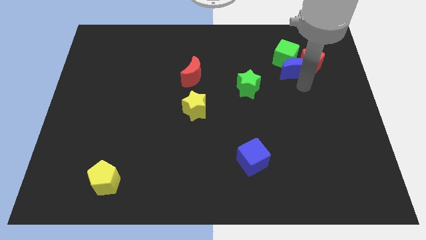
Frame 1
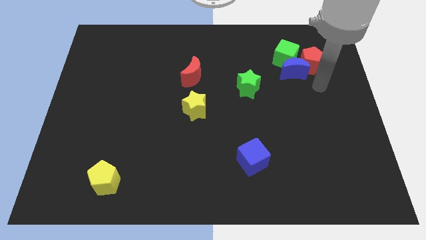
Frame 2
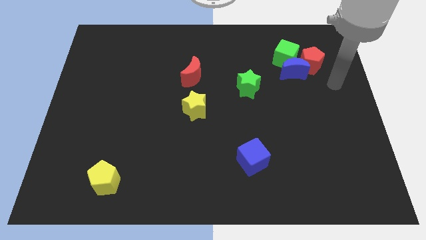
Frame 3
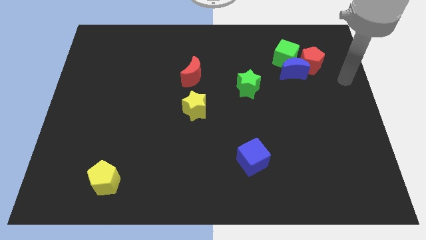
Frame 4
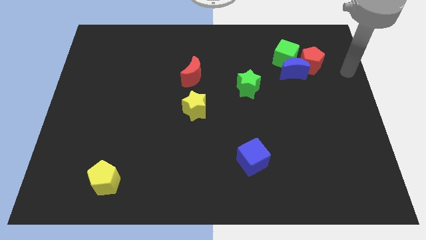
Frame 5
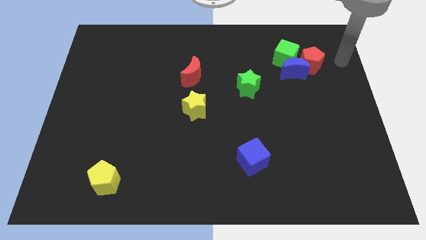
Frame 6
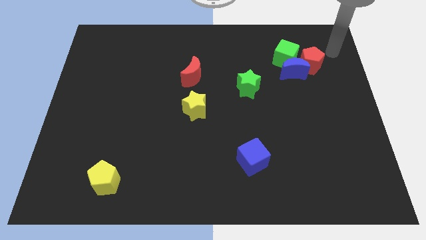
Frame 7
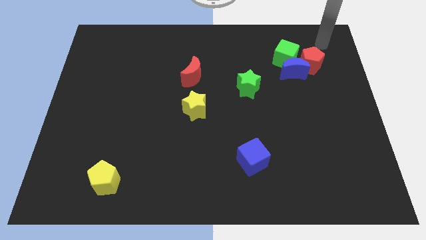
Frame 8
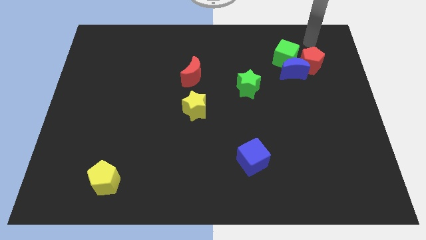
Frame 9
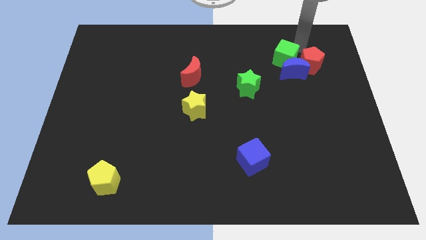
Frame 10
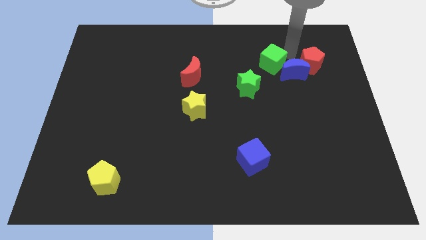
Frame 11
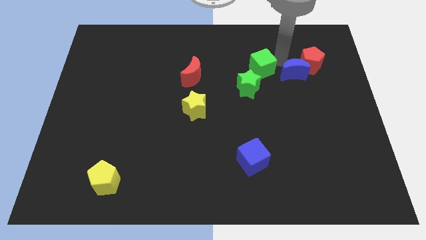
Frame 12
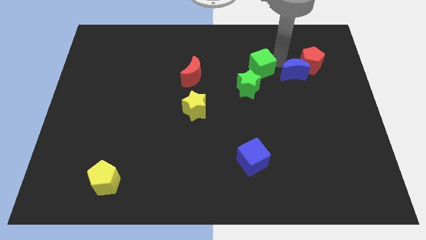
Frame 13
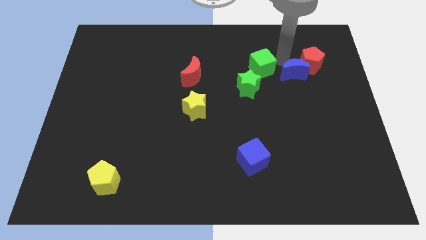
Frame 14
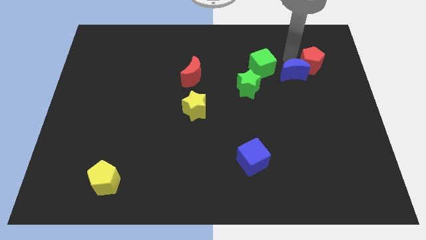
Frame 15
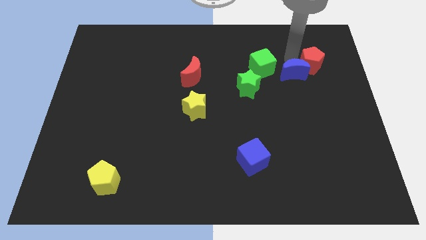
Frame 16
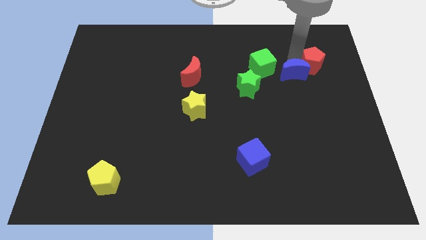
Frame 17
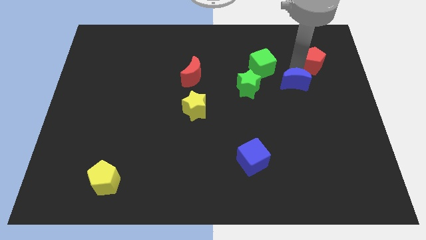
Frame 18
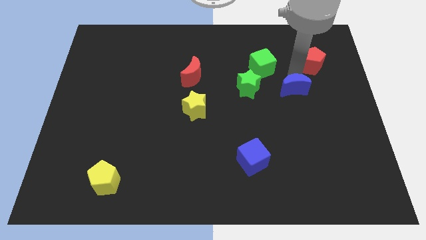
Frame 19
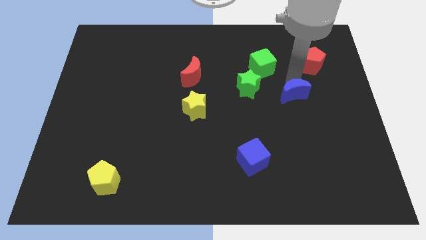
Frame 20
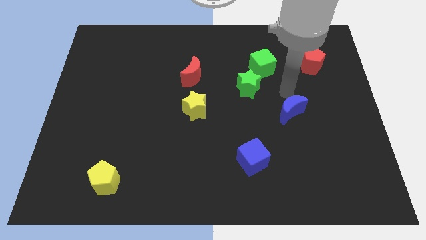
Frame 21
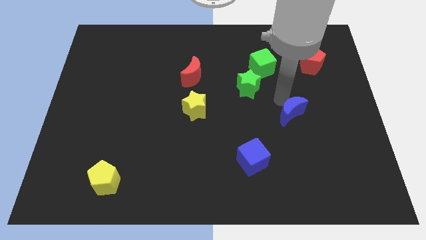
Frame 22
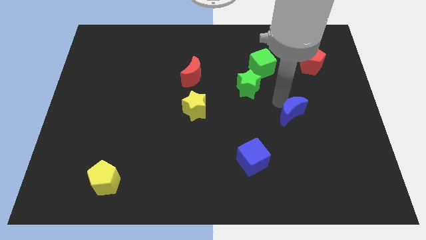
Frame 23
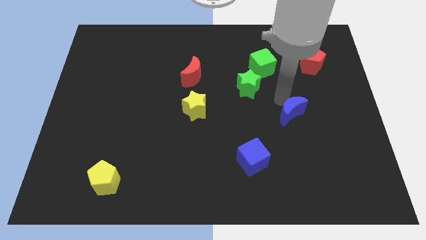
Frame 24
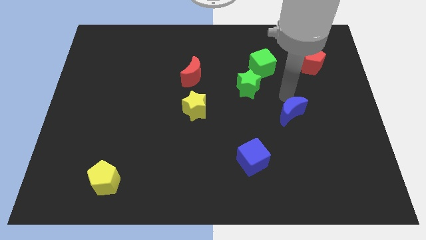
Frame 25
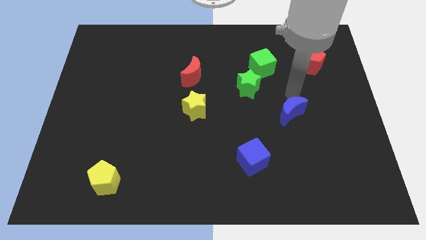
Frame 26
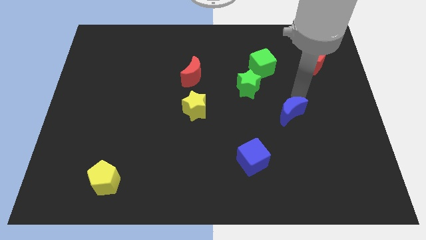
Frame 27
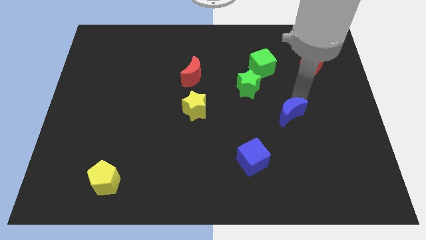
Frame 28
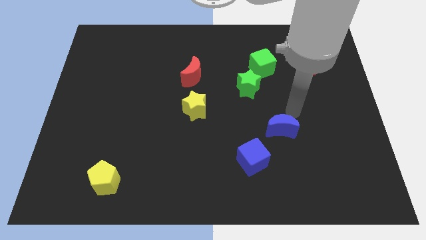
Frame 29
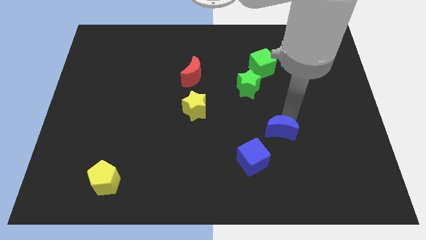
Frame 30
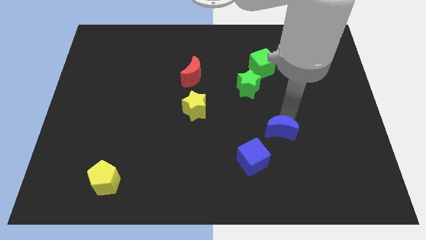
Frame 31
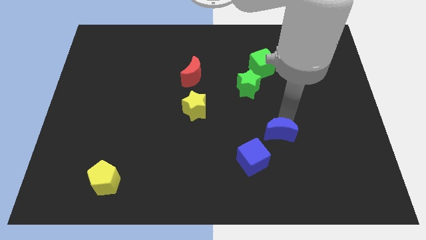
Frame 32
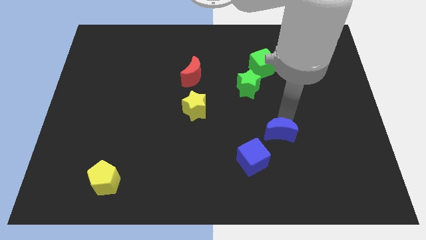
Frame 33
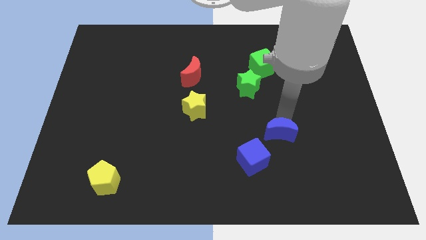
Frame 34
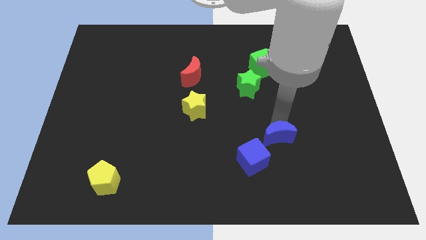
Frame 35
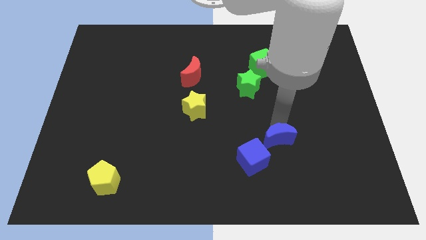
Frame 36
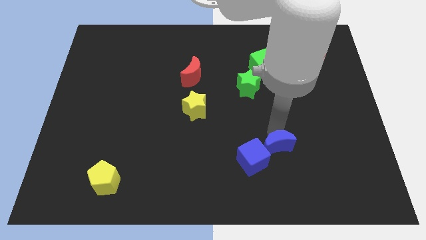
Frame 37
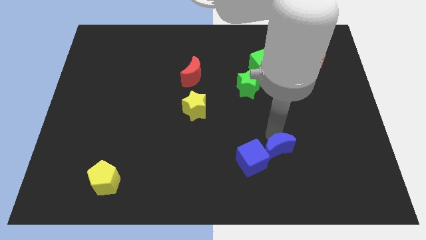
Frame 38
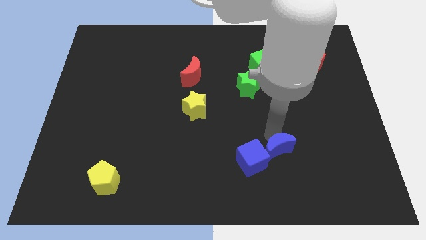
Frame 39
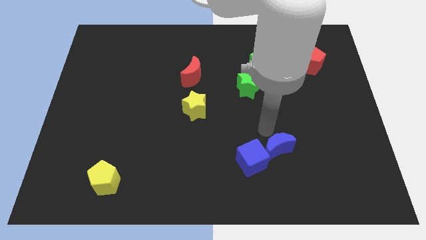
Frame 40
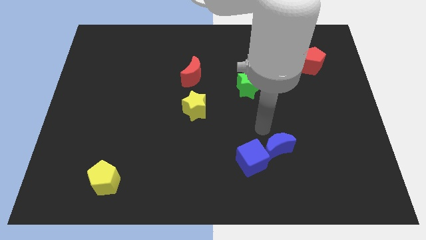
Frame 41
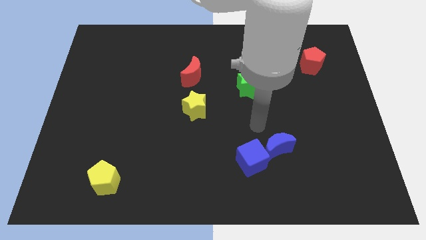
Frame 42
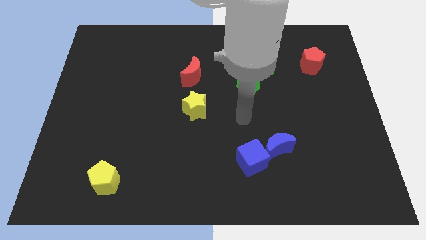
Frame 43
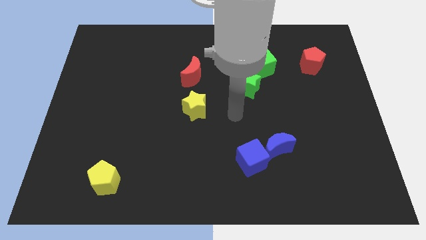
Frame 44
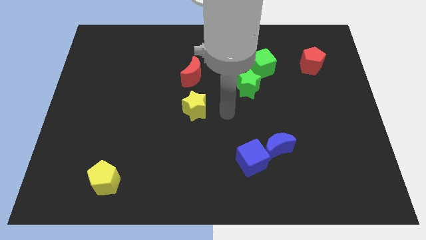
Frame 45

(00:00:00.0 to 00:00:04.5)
move the blue crescent to the right side of the blue cube

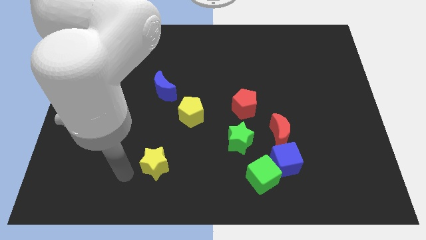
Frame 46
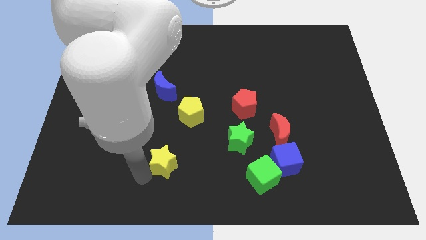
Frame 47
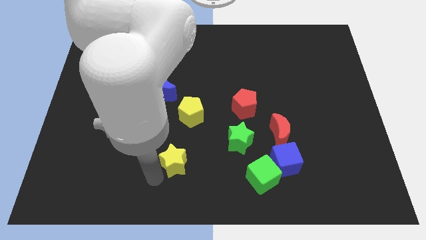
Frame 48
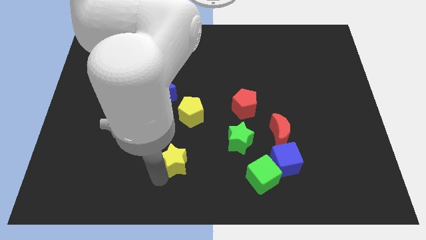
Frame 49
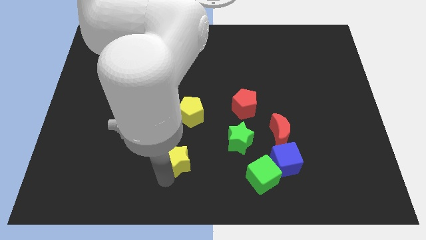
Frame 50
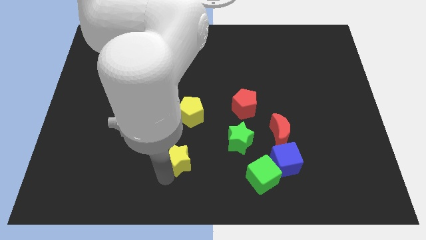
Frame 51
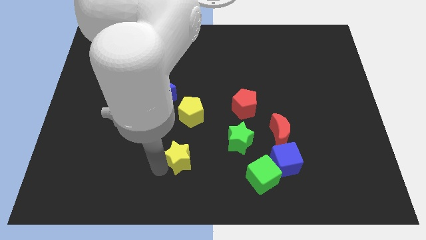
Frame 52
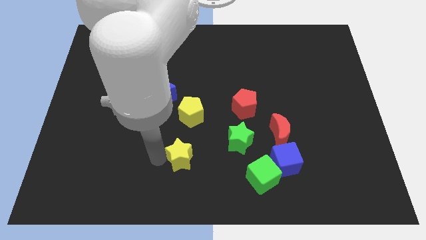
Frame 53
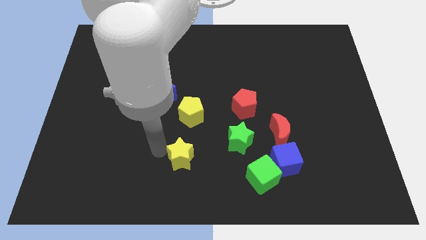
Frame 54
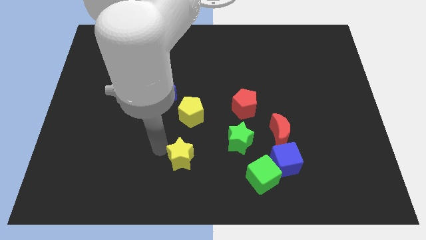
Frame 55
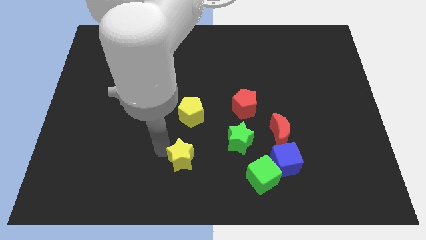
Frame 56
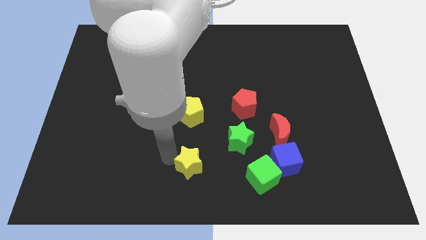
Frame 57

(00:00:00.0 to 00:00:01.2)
place yellow star to the bottom of yellow pentagon

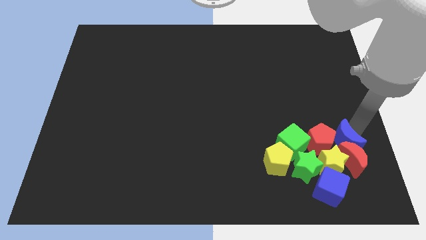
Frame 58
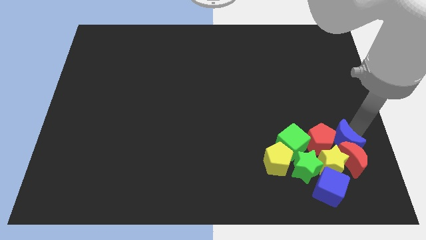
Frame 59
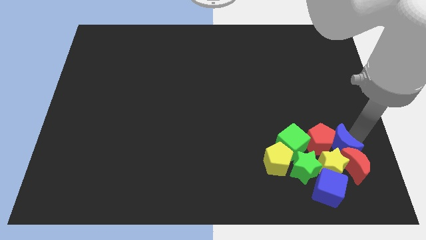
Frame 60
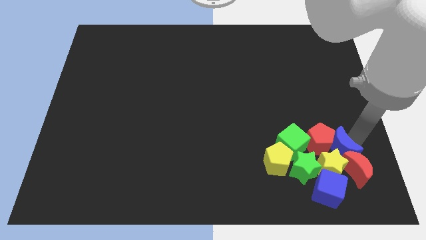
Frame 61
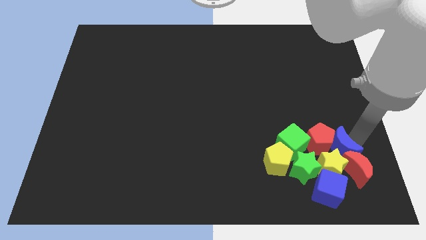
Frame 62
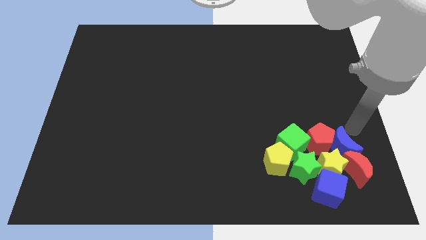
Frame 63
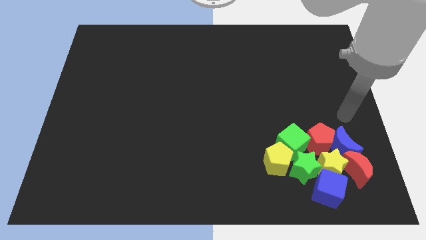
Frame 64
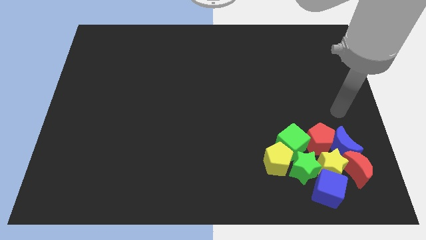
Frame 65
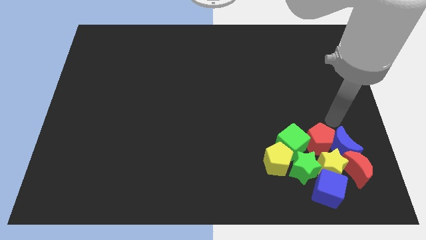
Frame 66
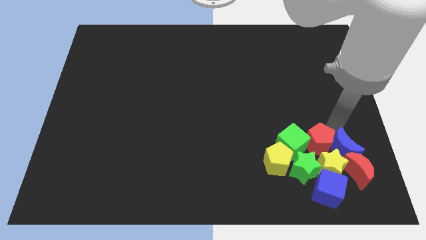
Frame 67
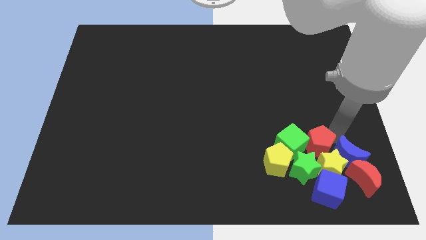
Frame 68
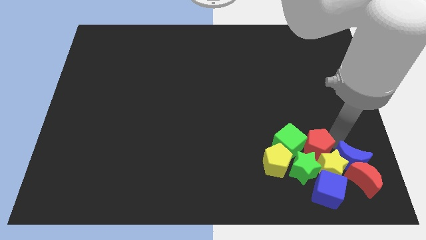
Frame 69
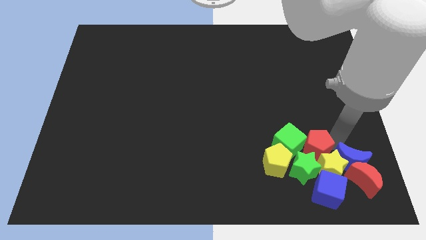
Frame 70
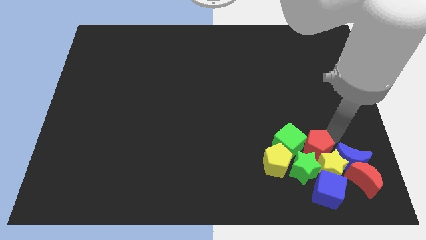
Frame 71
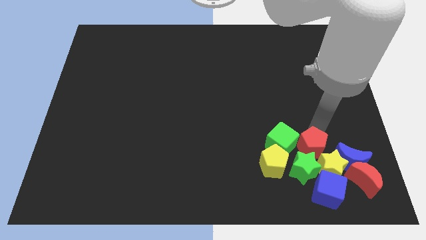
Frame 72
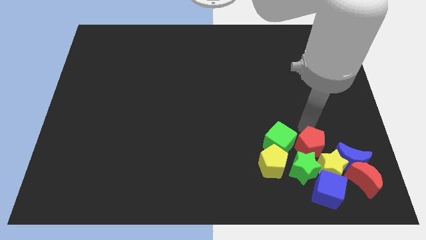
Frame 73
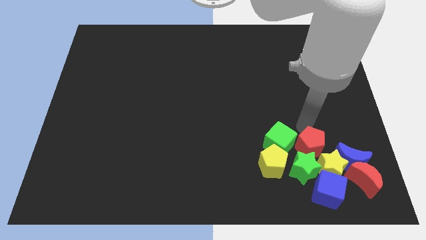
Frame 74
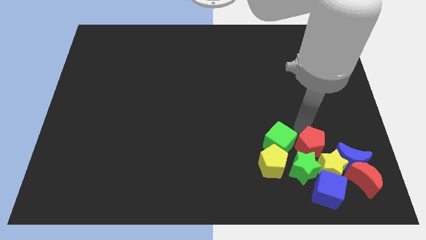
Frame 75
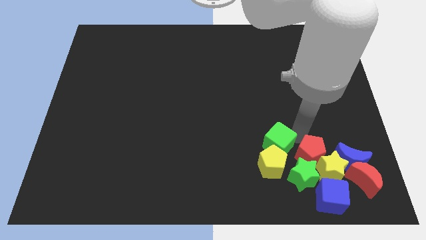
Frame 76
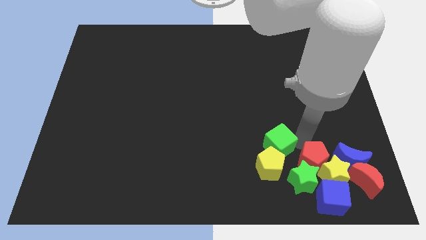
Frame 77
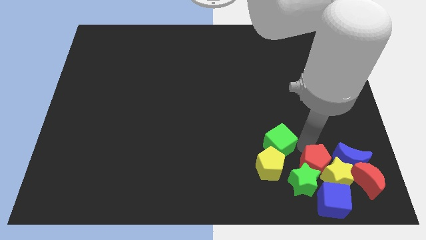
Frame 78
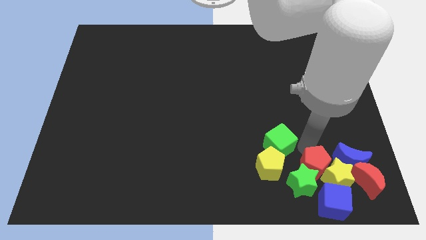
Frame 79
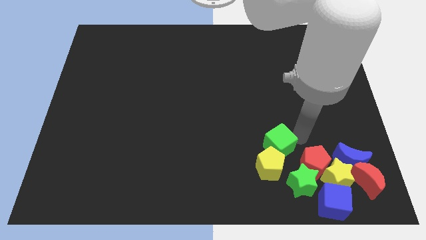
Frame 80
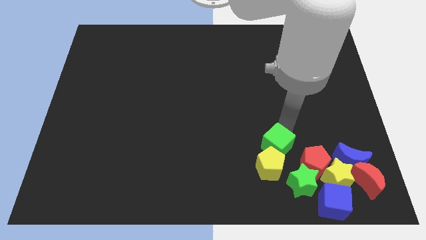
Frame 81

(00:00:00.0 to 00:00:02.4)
push the blue moon red pentagon and green cube to the group of blocks

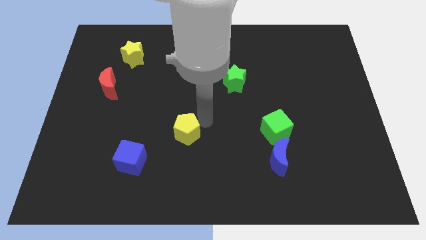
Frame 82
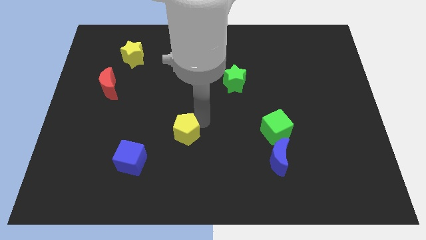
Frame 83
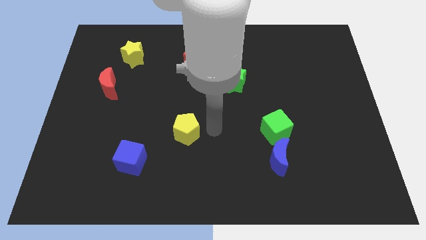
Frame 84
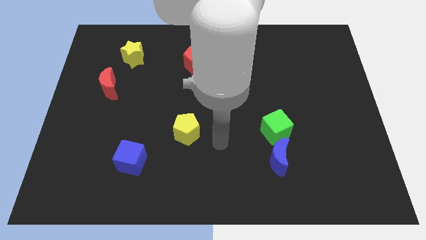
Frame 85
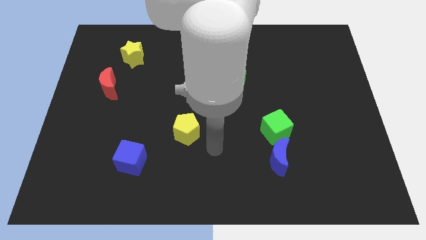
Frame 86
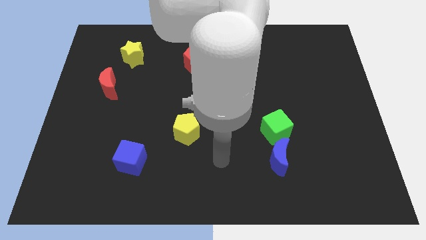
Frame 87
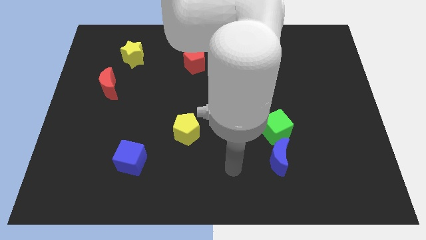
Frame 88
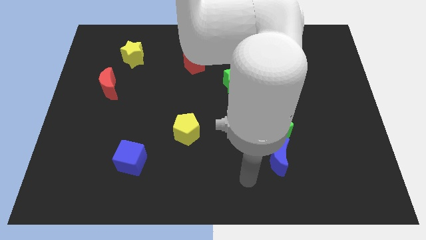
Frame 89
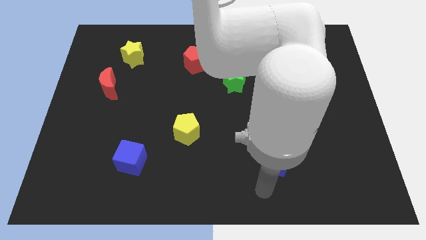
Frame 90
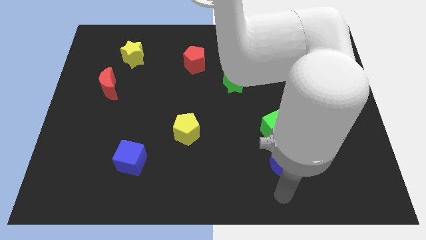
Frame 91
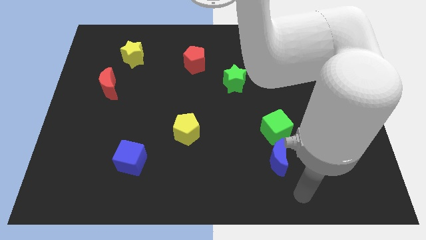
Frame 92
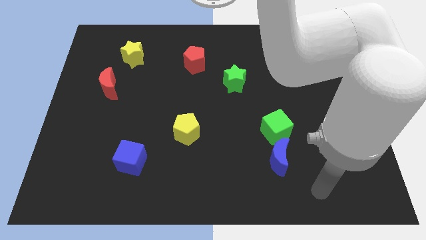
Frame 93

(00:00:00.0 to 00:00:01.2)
put your hand at the bottom right
